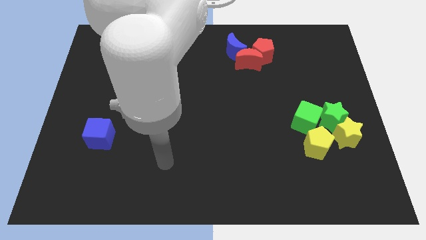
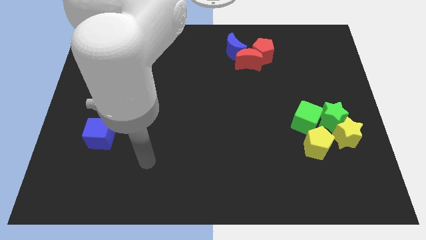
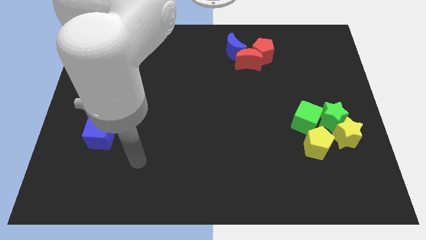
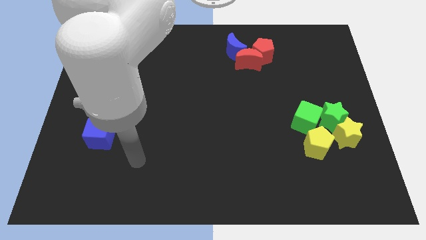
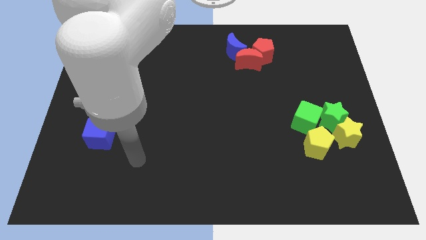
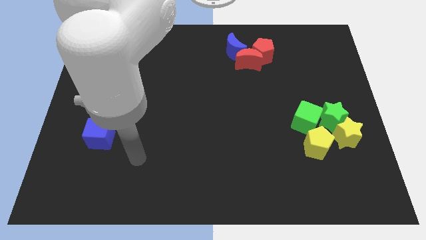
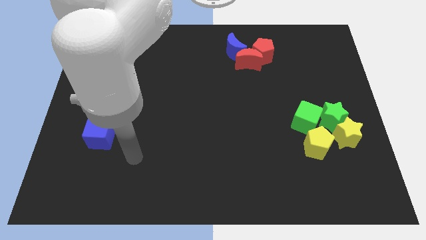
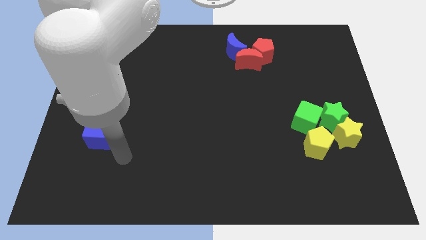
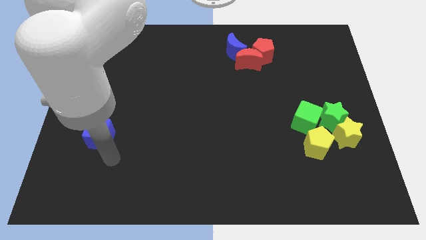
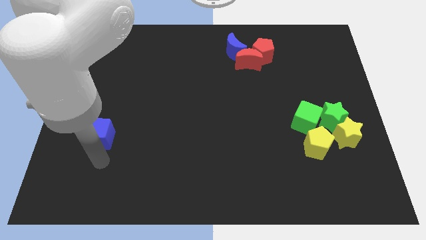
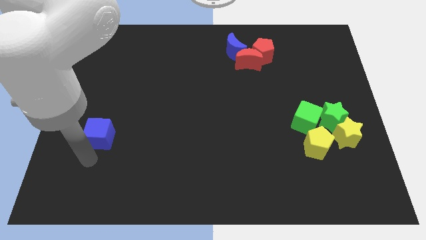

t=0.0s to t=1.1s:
point your arm at the bottom side of the blue cube

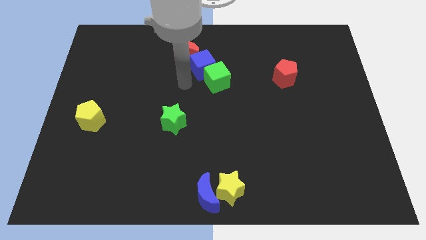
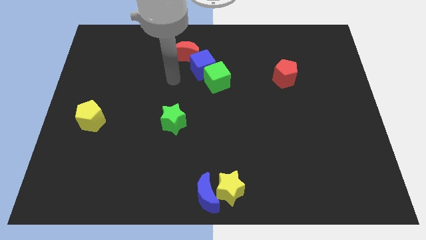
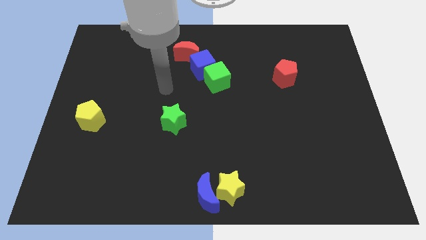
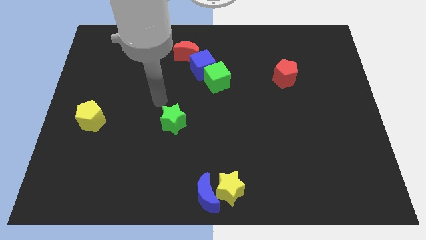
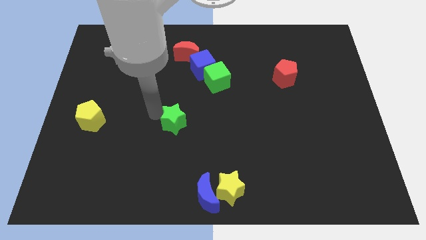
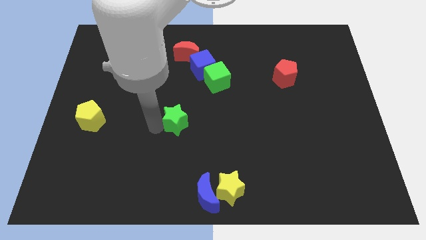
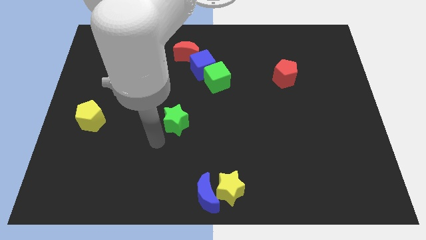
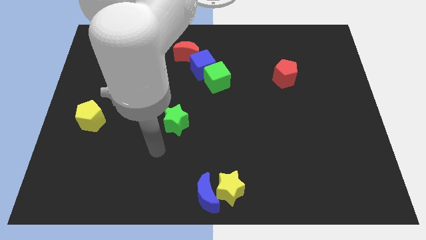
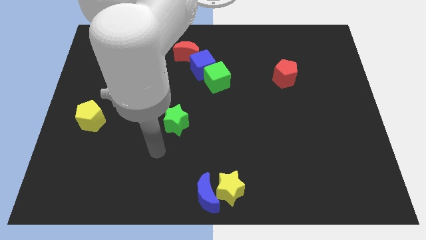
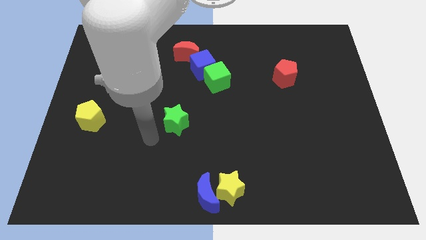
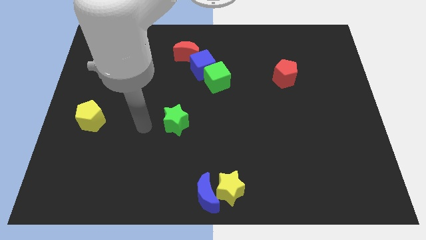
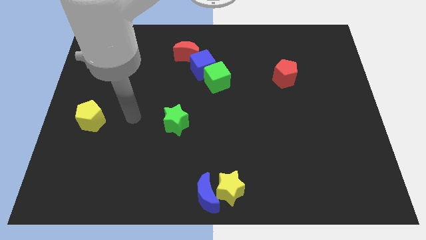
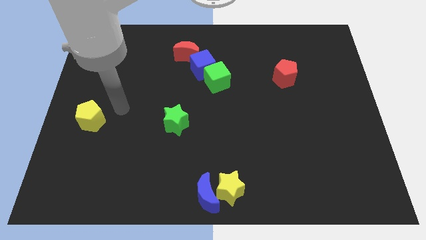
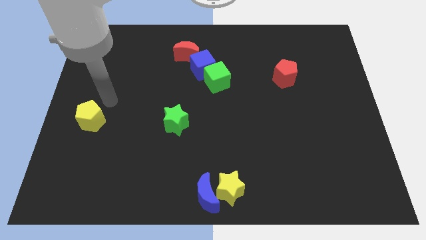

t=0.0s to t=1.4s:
slightly touch the green star

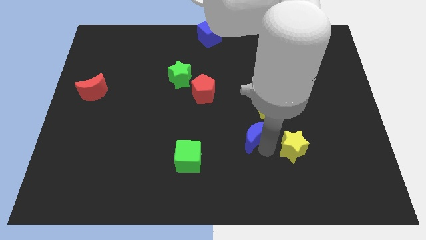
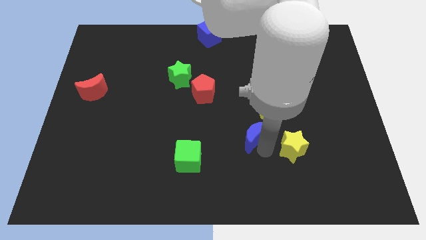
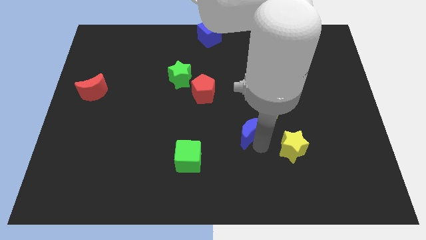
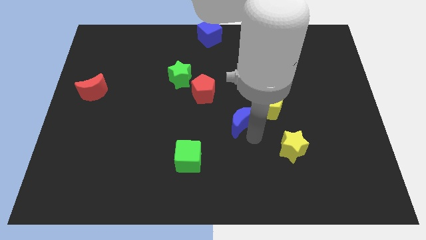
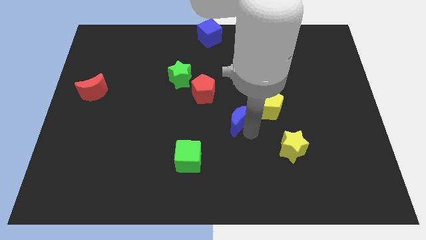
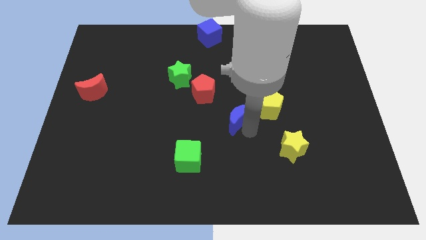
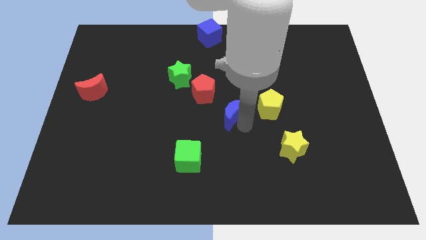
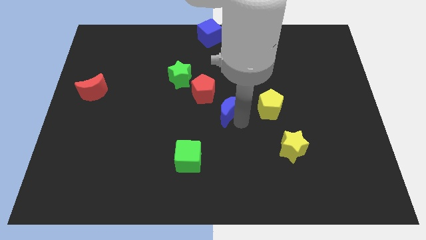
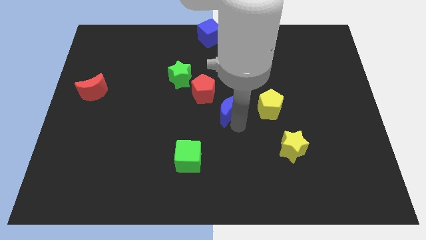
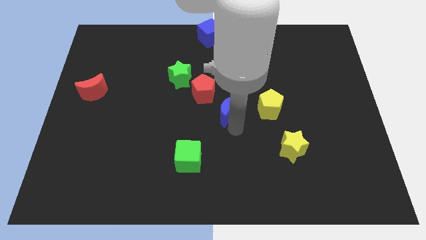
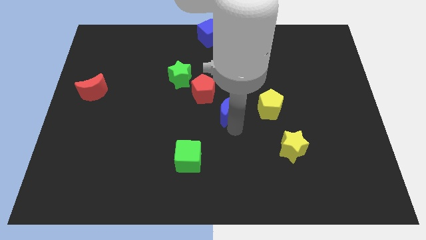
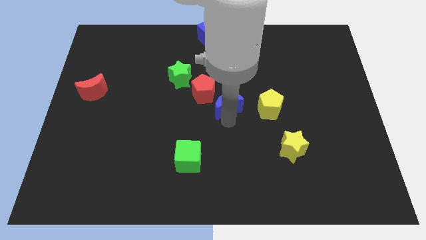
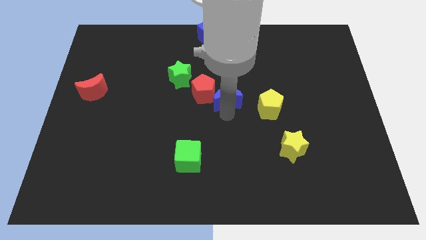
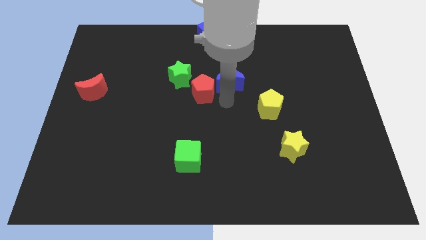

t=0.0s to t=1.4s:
place blue moon to the right of red pentagon

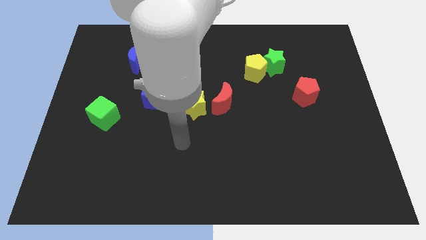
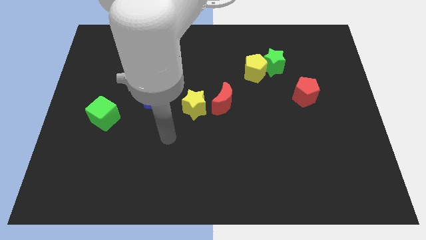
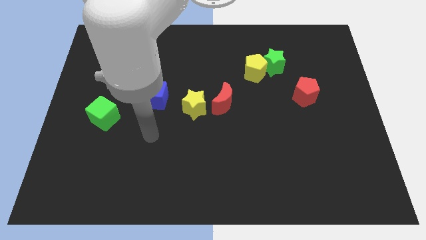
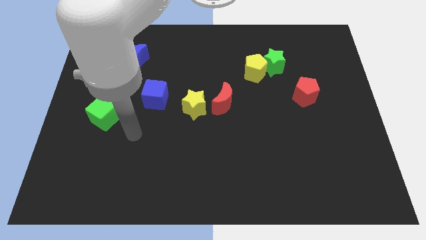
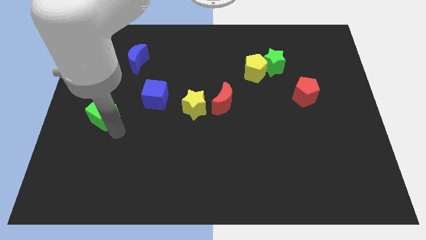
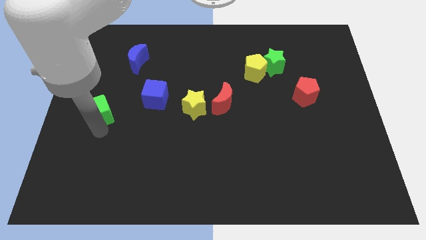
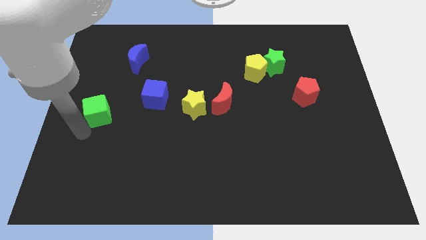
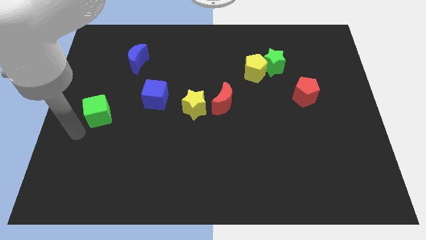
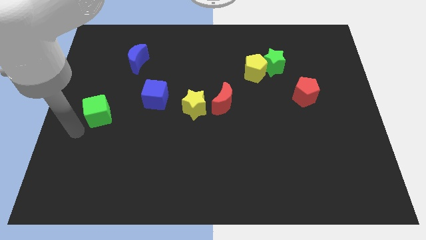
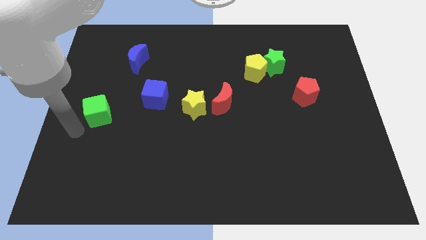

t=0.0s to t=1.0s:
touch the bottom side of the green cube

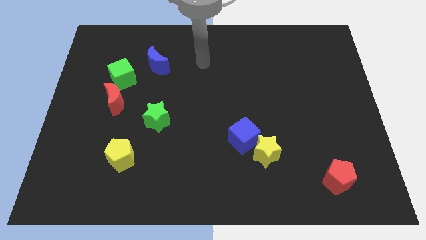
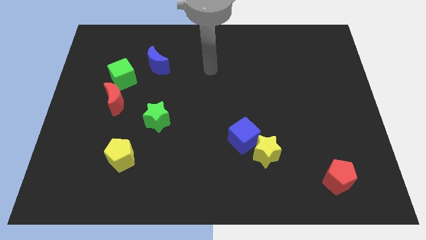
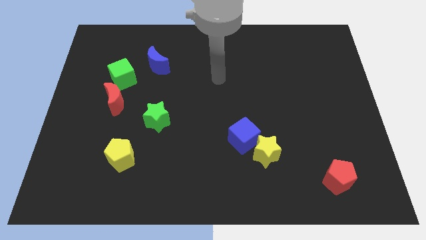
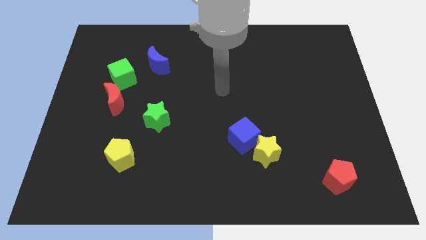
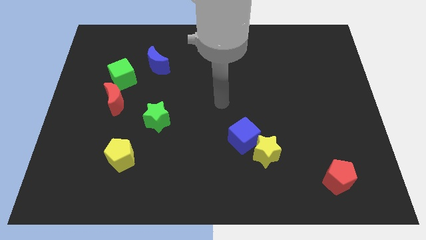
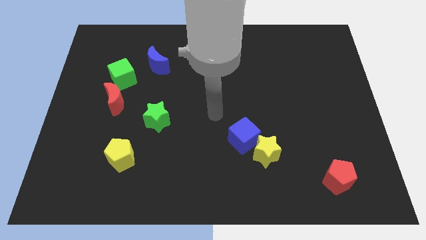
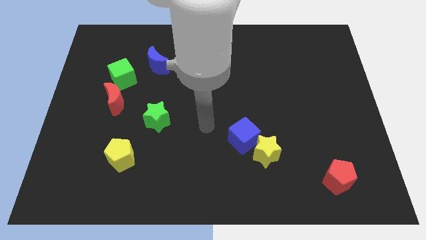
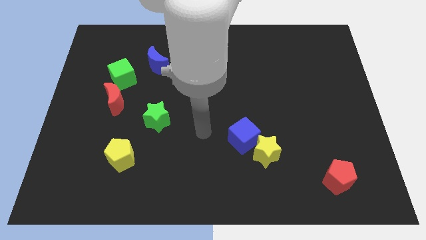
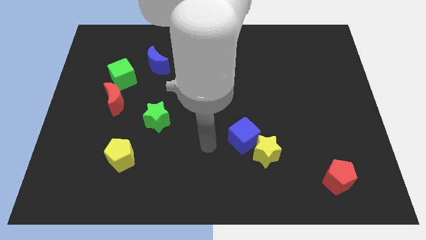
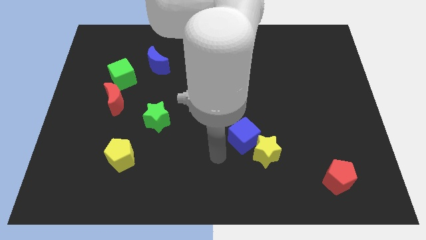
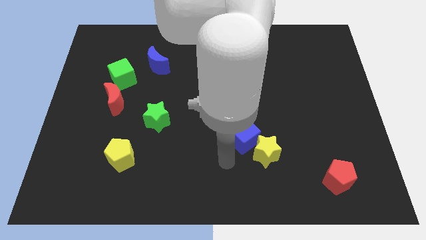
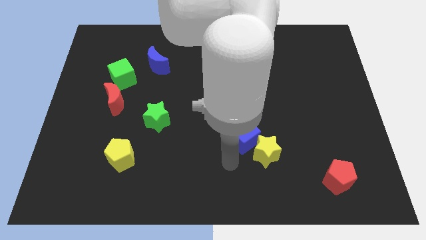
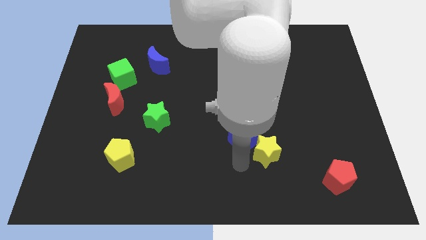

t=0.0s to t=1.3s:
point your hand below the blue cube

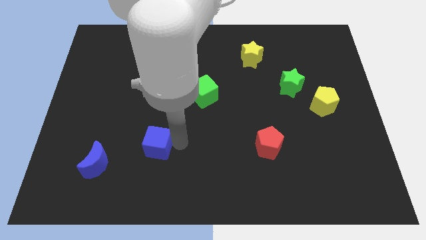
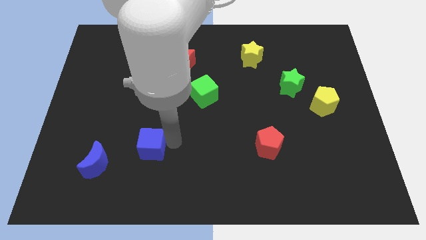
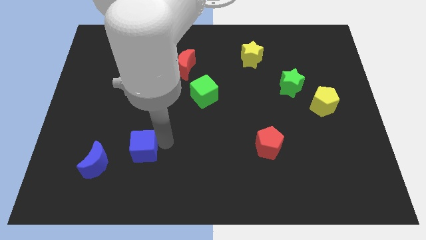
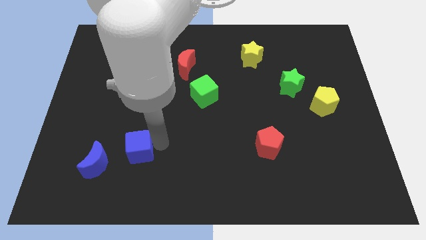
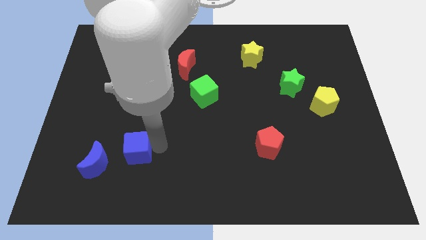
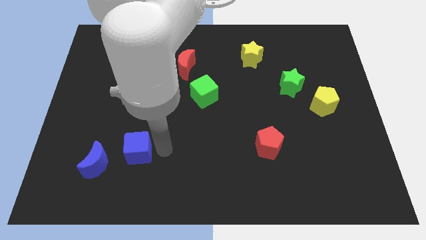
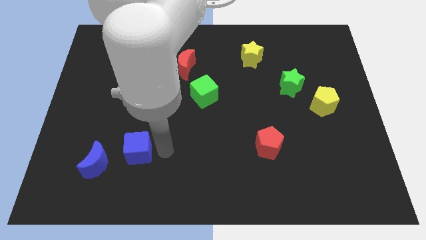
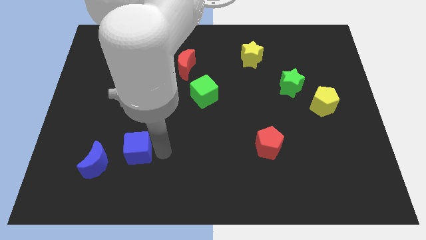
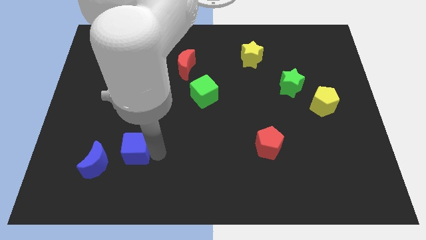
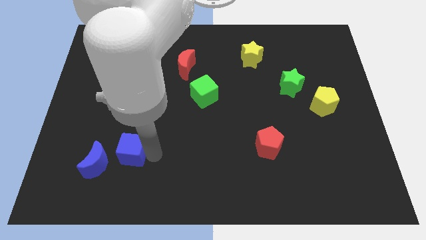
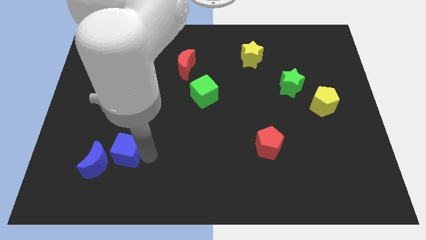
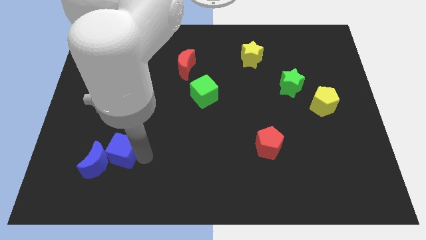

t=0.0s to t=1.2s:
push the blue cube to the right of the blue crescent

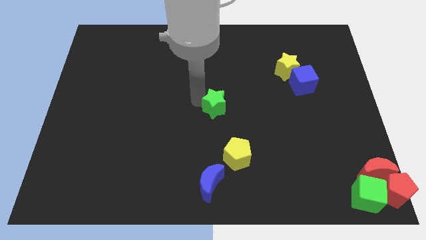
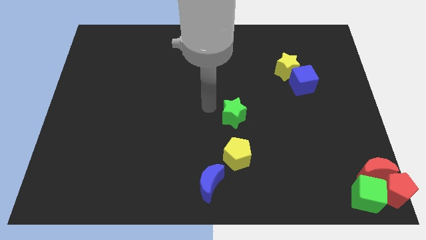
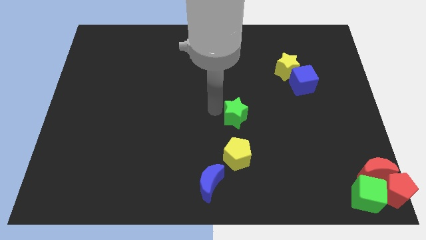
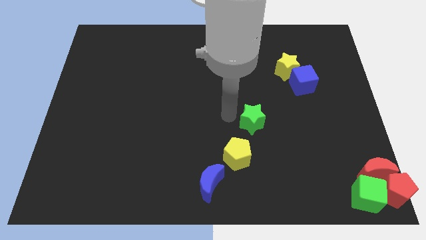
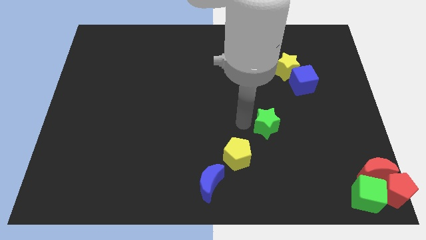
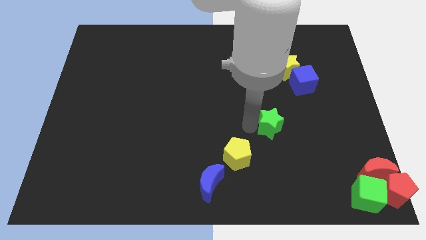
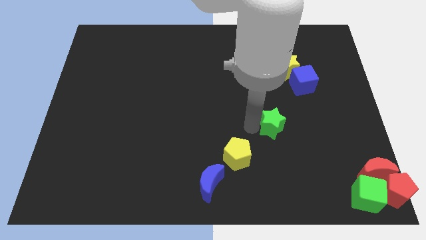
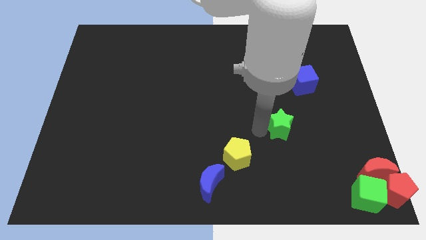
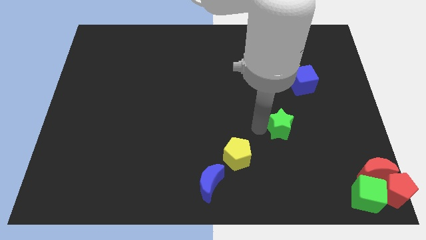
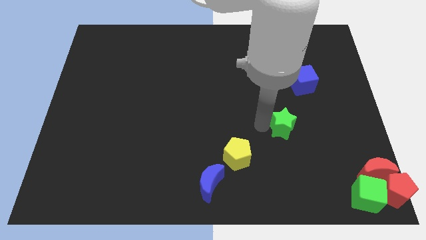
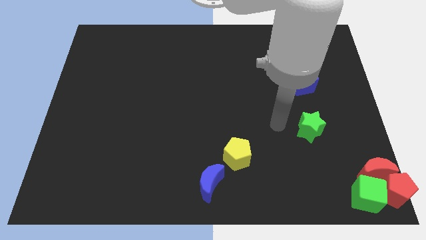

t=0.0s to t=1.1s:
push green star below blue cube

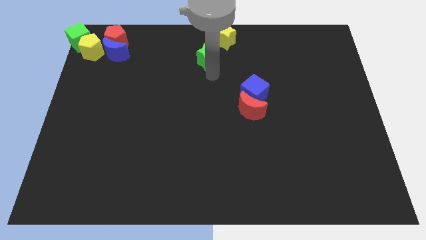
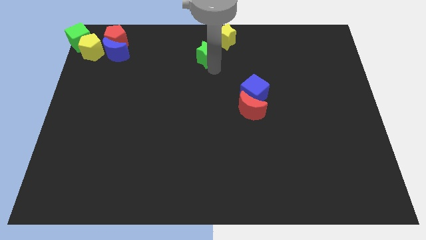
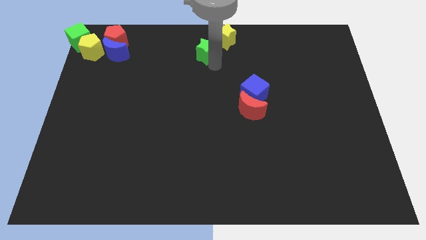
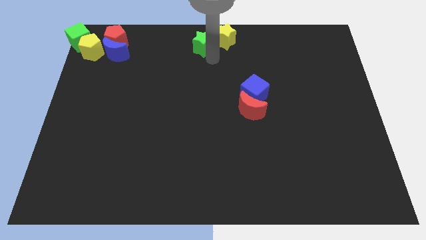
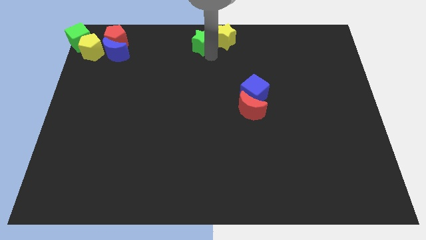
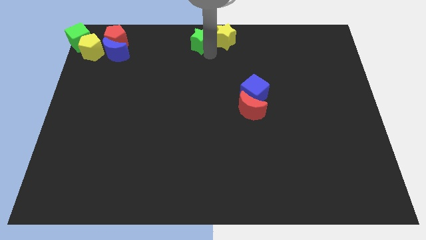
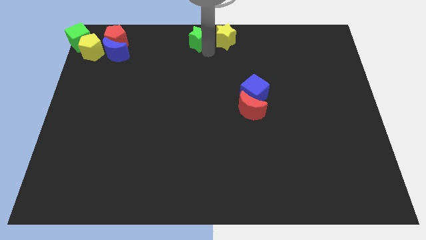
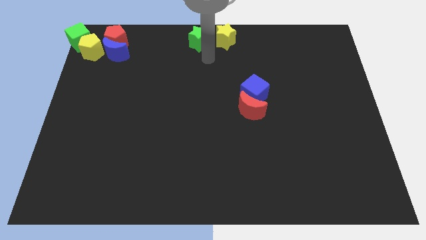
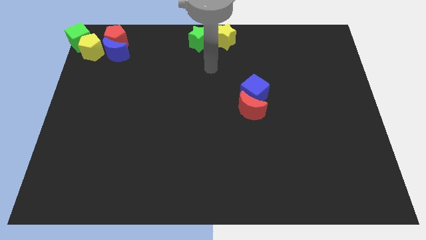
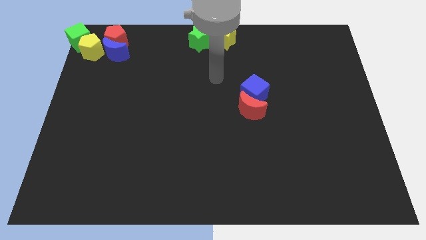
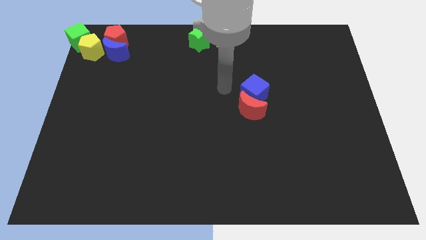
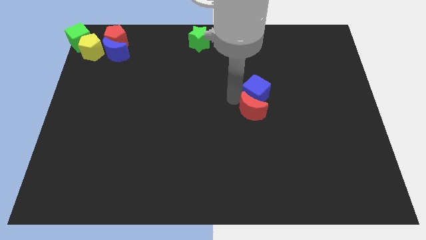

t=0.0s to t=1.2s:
place the green star parallel to the yellow star
